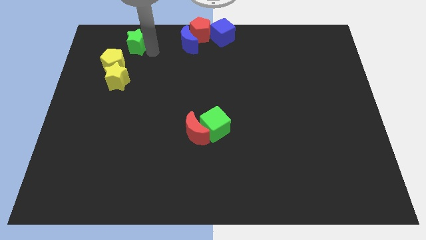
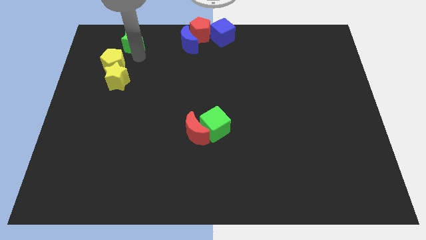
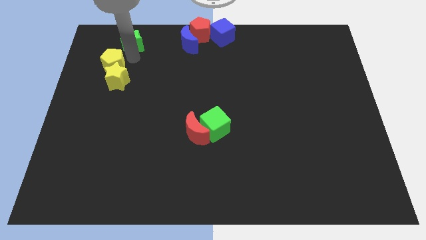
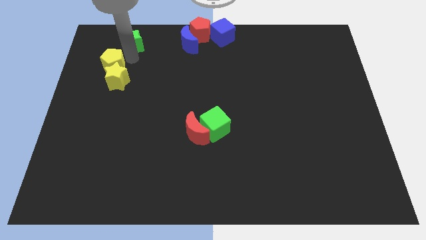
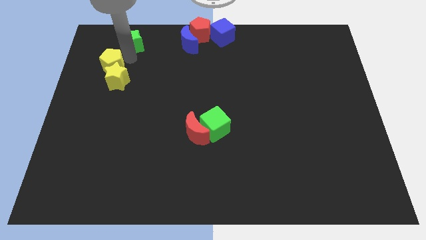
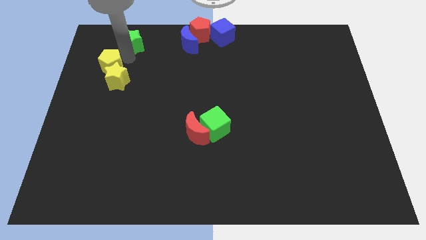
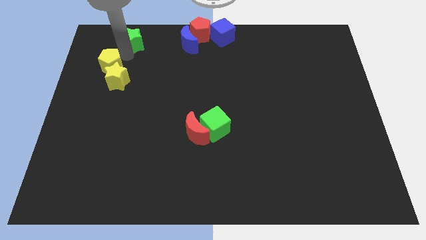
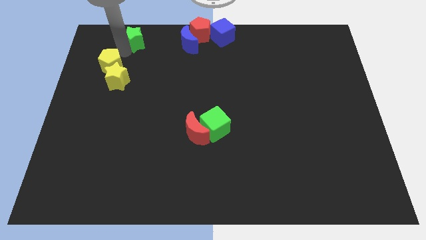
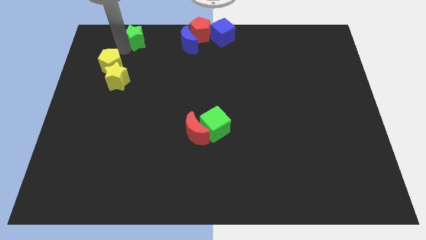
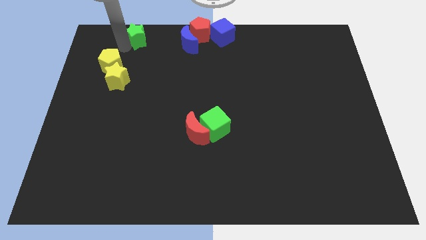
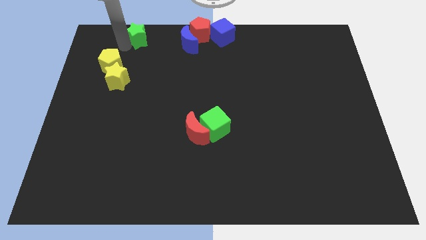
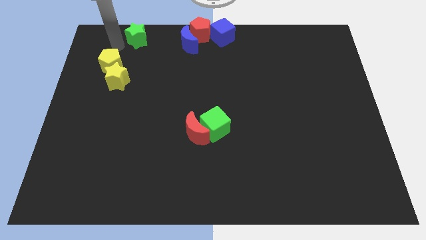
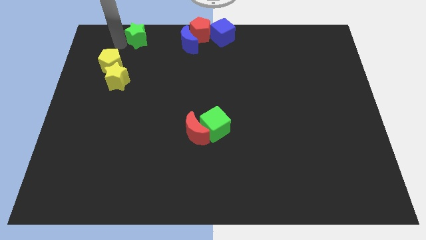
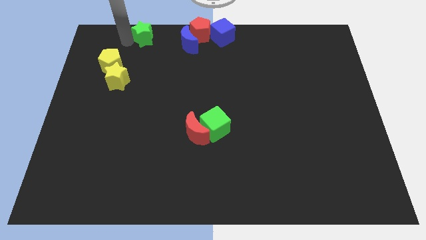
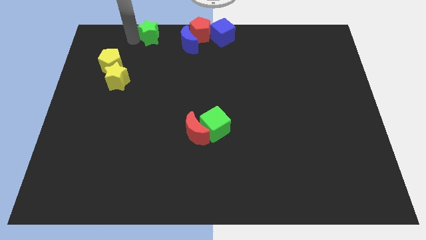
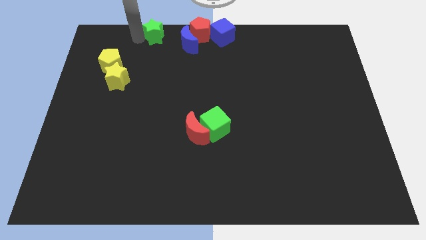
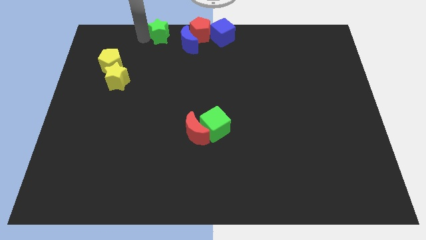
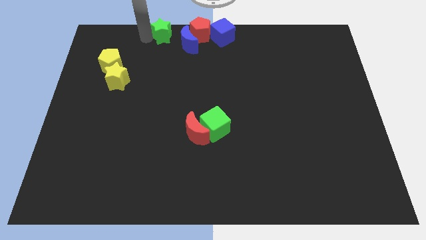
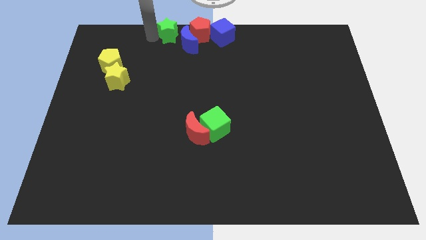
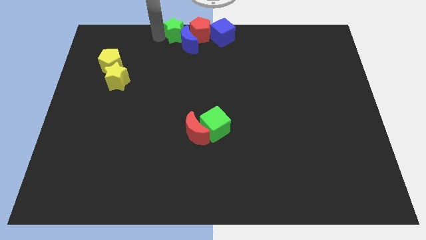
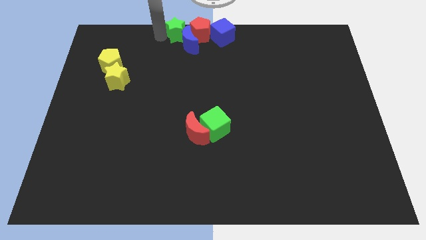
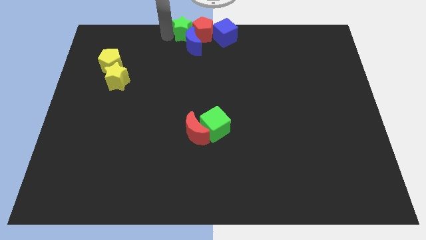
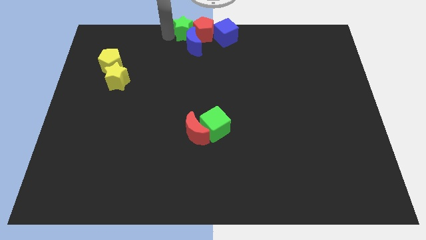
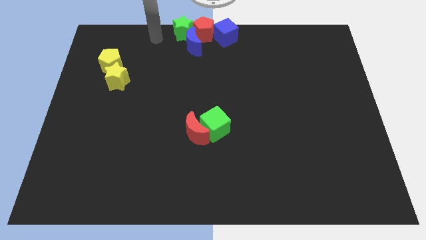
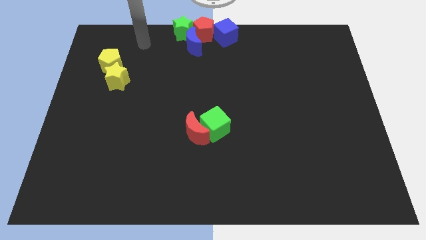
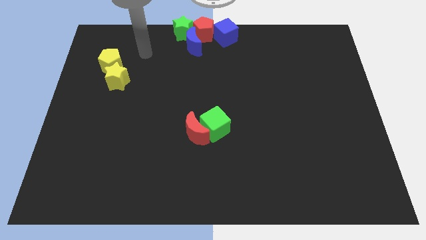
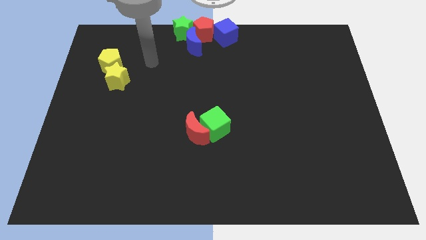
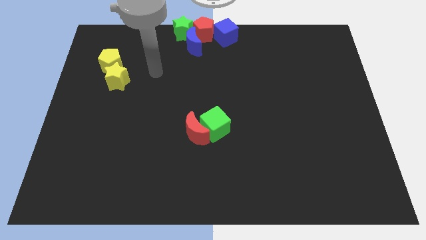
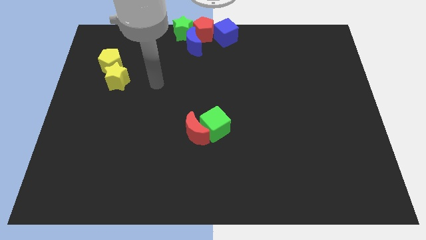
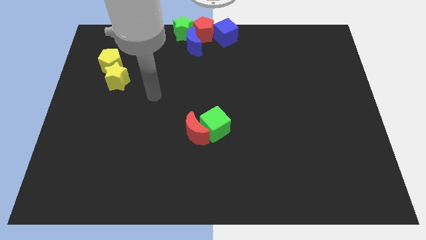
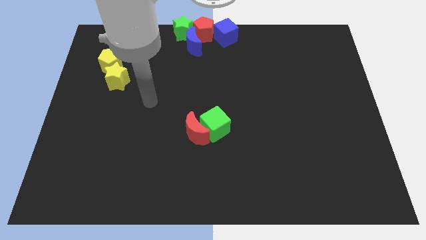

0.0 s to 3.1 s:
push the green star into red pentagon

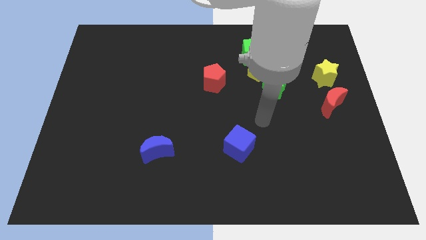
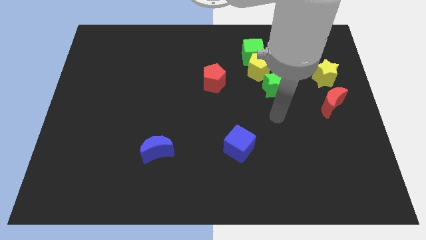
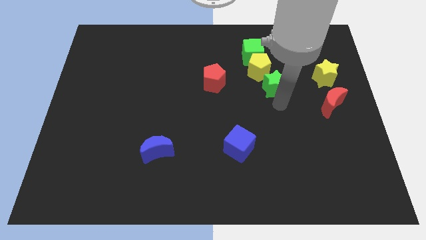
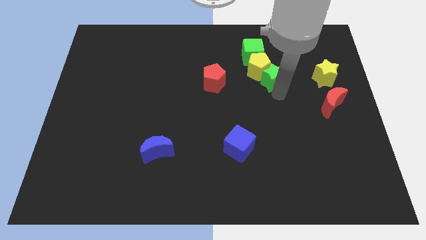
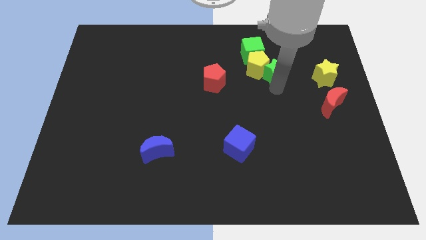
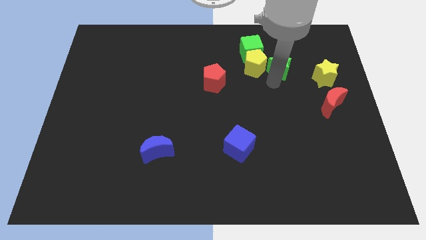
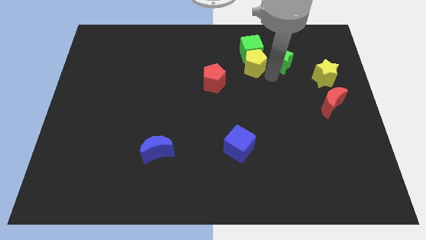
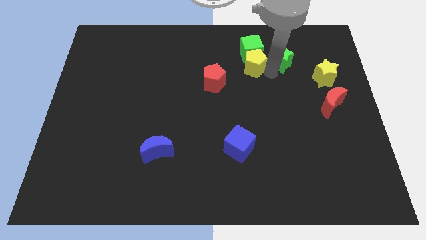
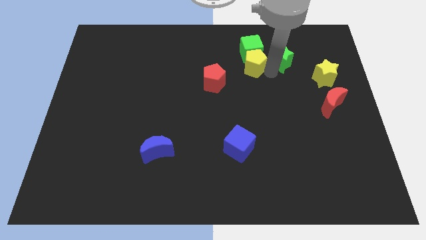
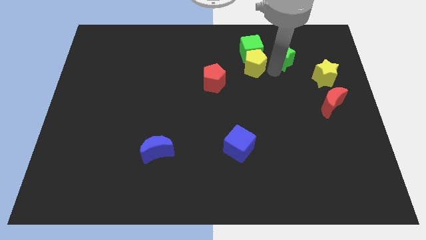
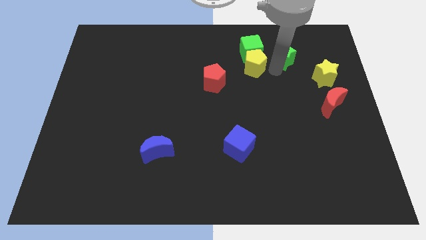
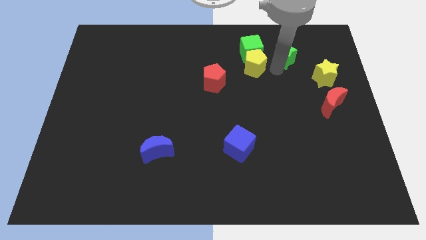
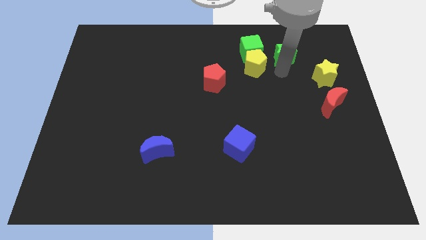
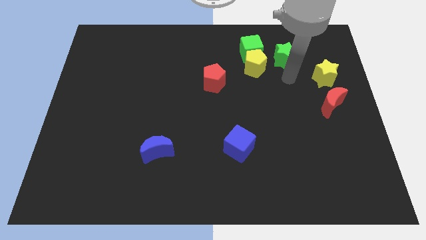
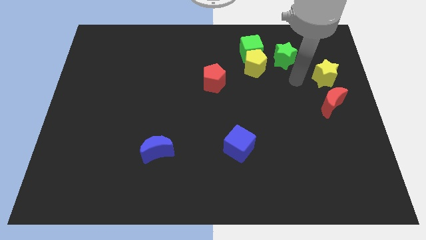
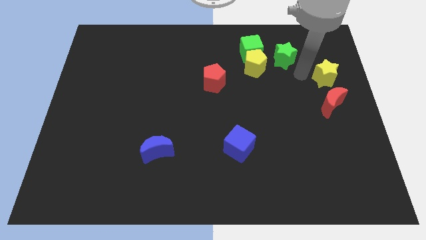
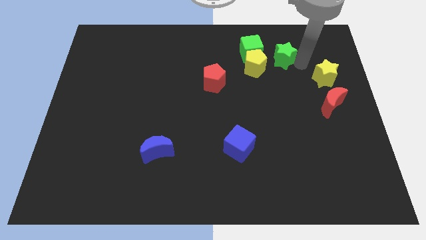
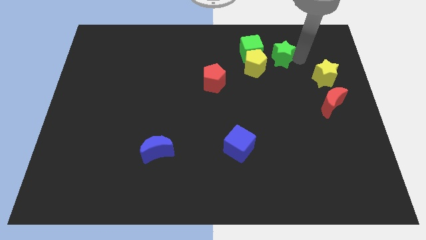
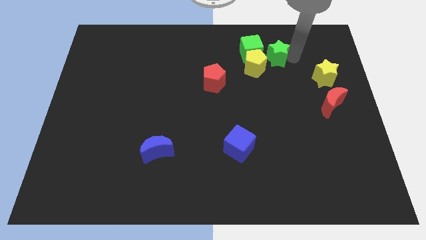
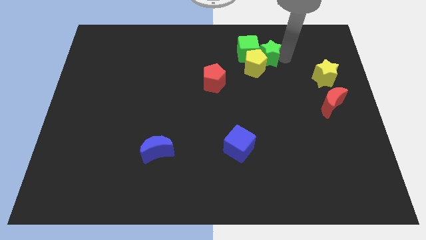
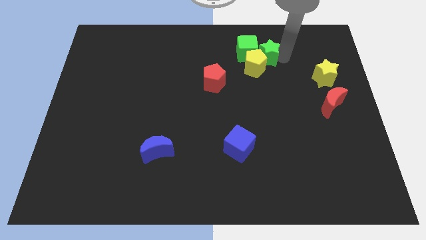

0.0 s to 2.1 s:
place the green star into green cube to the right

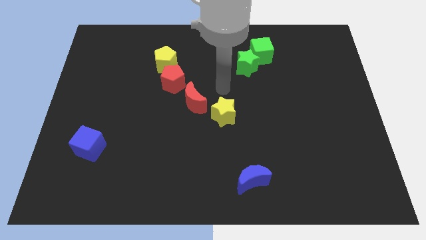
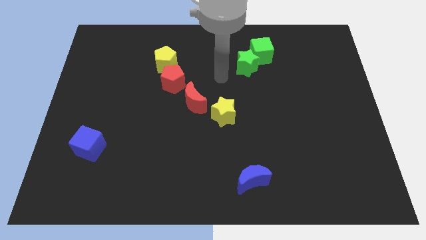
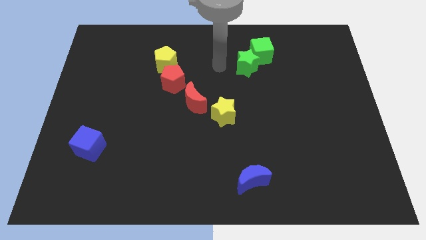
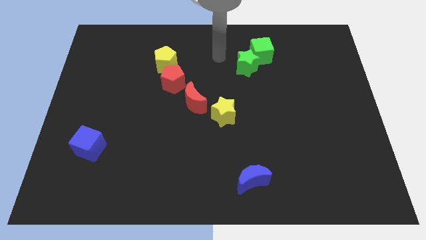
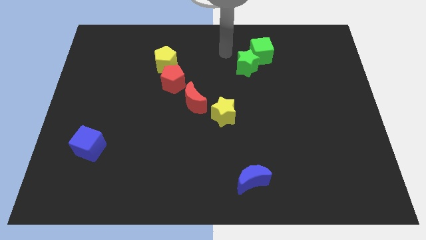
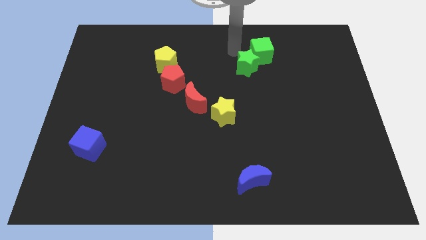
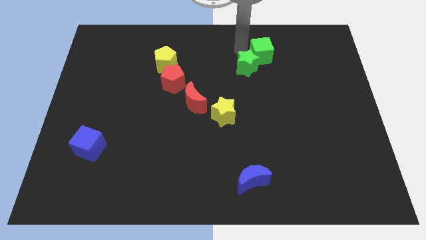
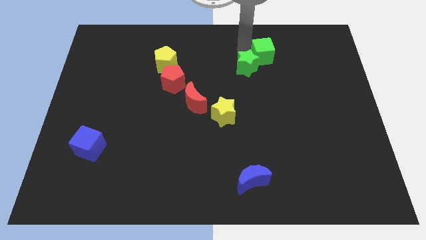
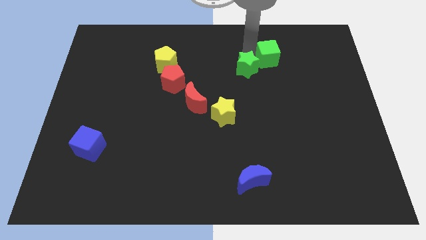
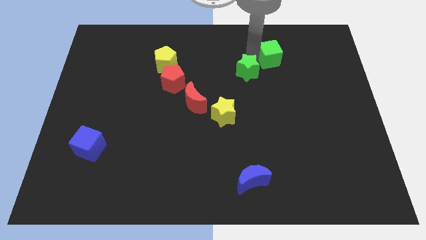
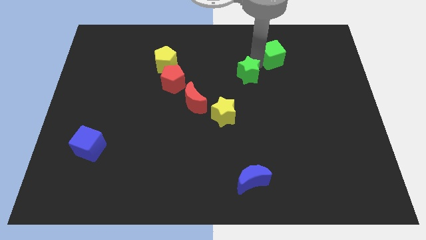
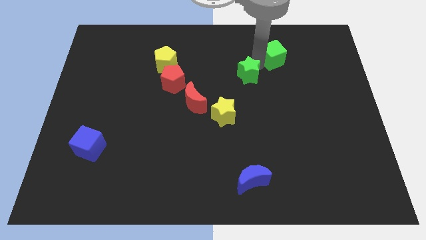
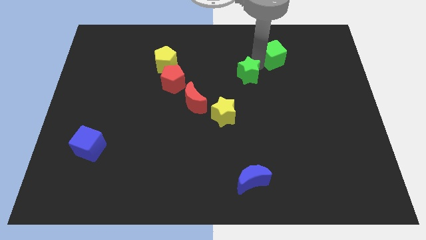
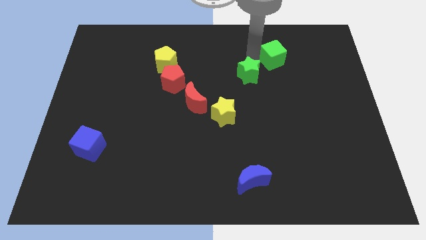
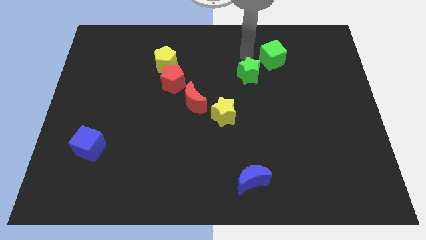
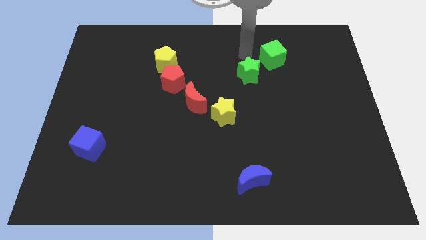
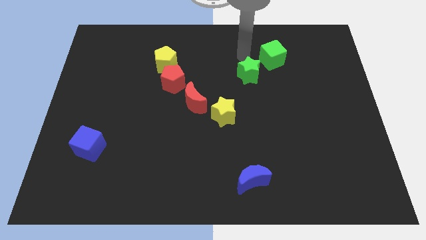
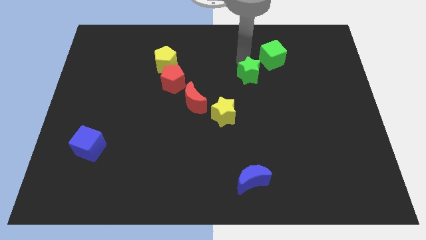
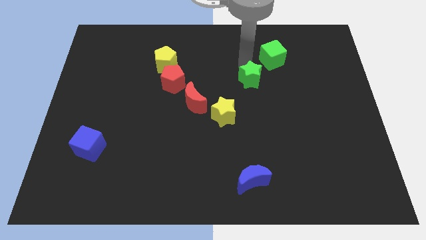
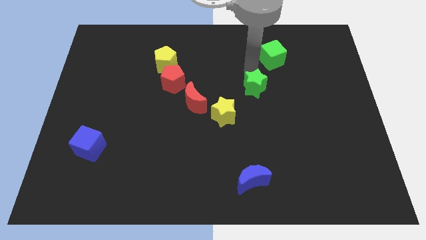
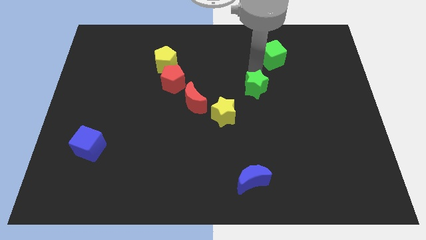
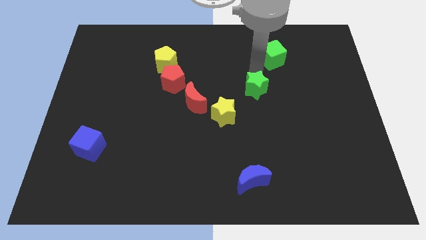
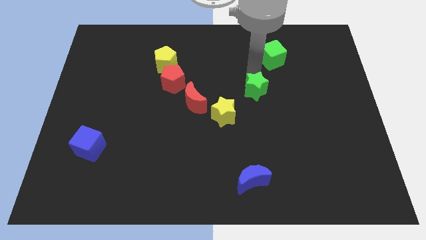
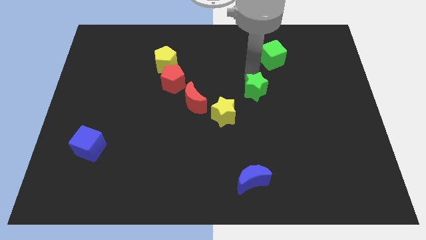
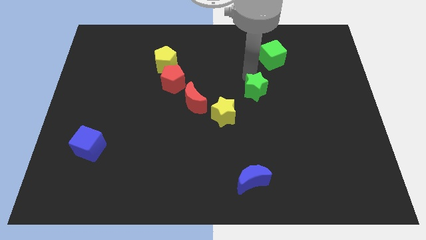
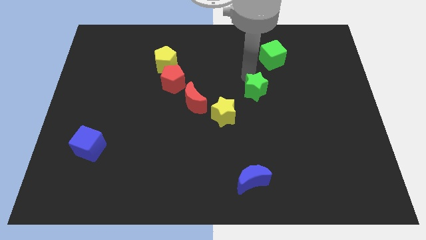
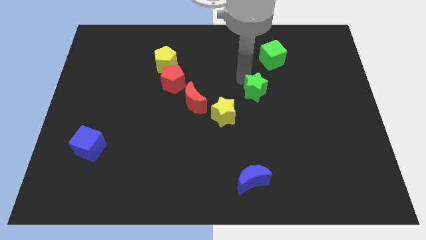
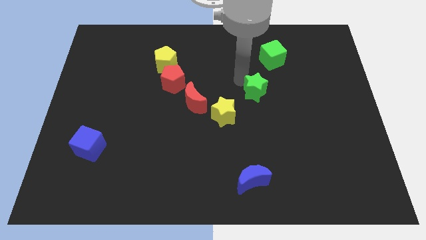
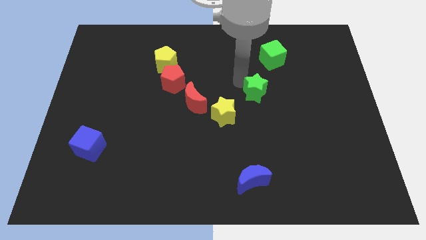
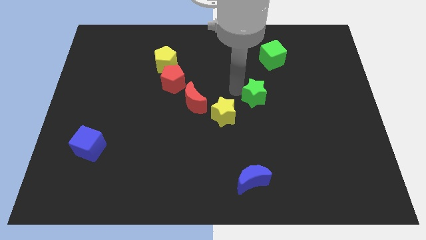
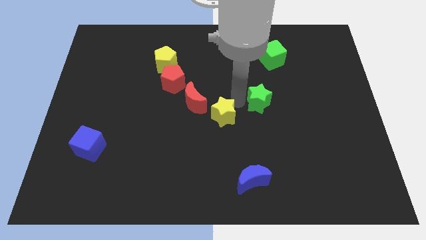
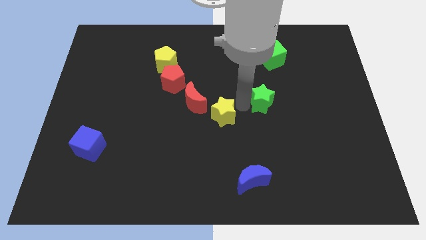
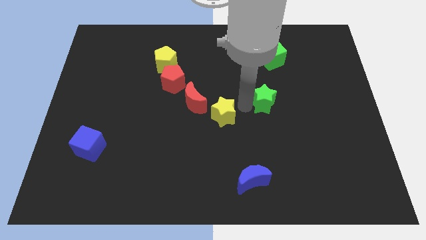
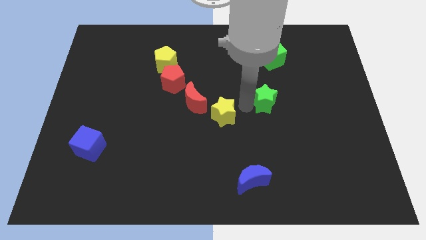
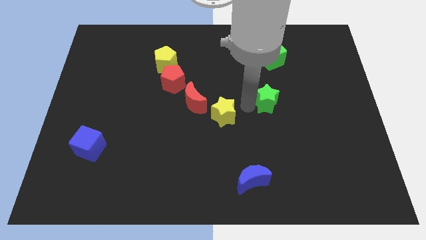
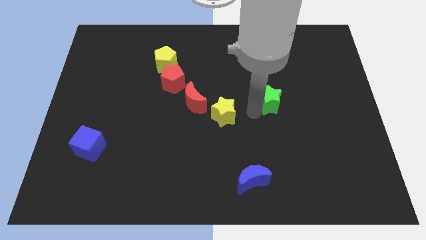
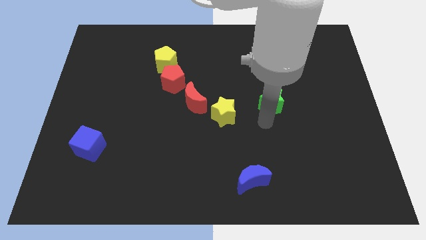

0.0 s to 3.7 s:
slightly push the green star downwards
